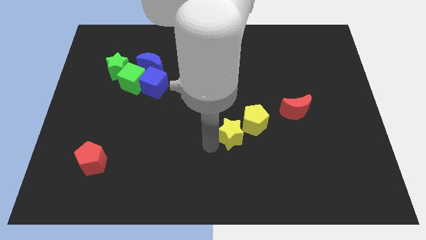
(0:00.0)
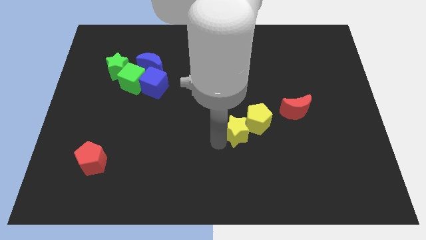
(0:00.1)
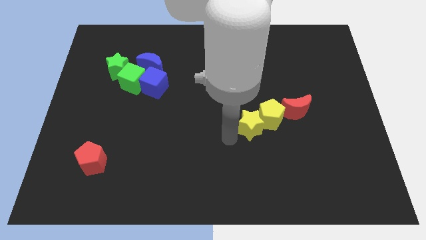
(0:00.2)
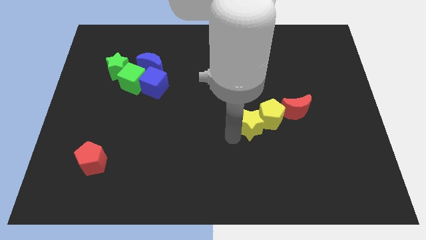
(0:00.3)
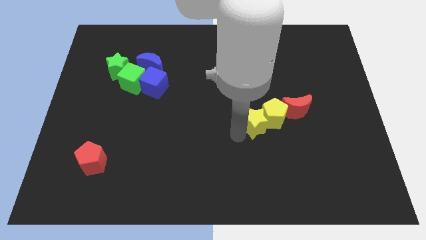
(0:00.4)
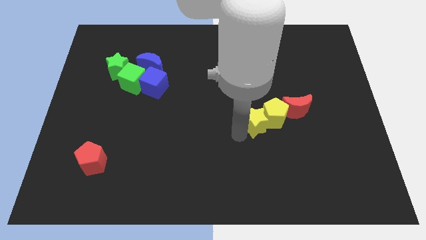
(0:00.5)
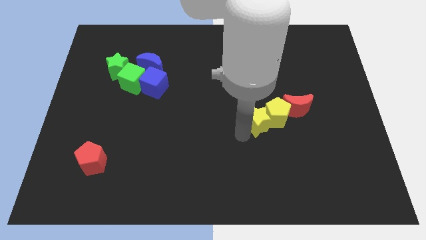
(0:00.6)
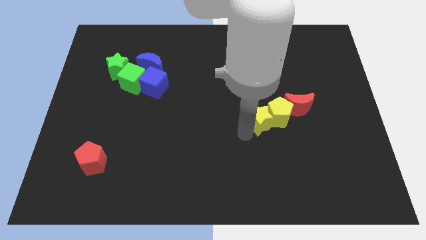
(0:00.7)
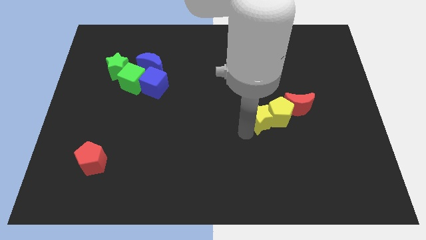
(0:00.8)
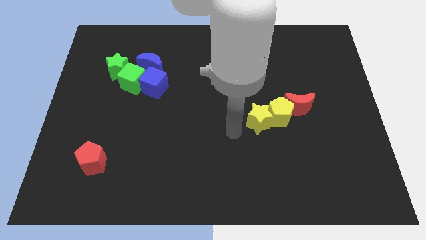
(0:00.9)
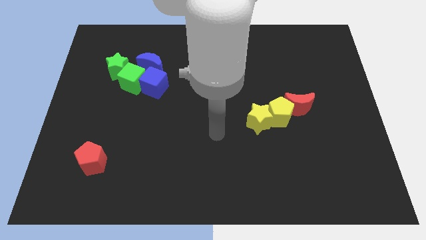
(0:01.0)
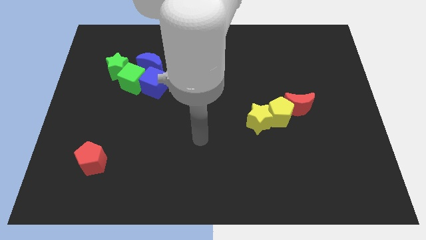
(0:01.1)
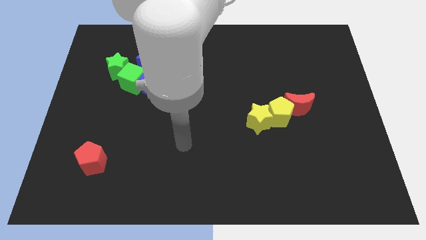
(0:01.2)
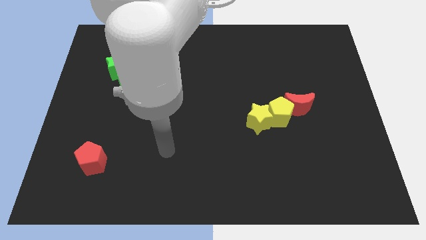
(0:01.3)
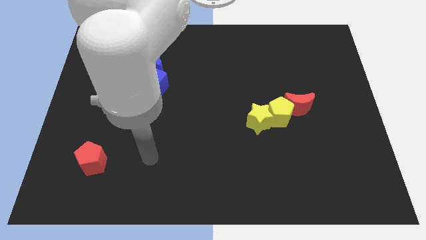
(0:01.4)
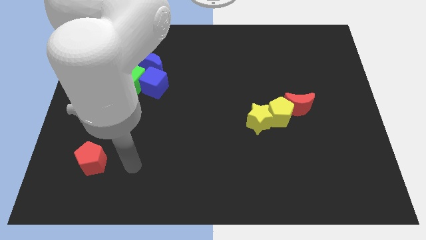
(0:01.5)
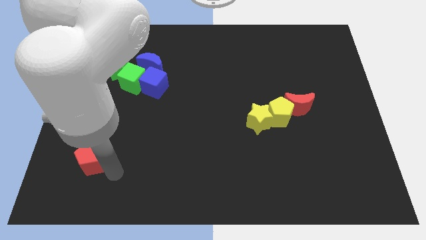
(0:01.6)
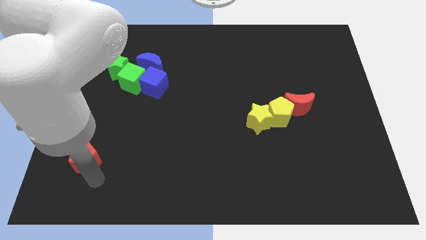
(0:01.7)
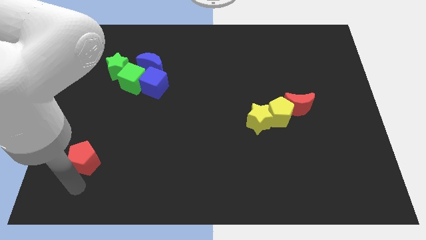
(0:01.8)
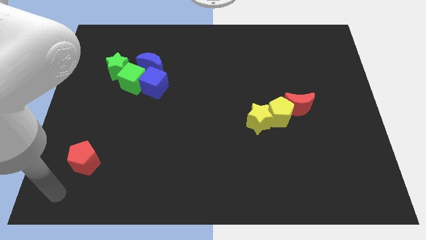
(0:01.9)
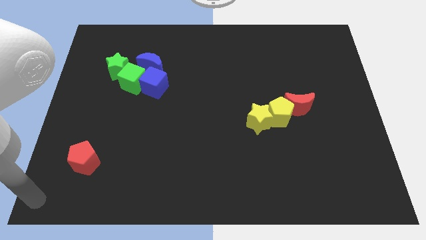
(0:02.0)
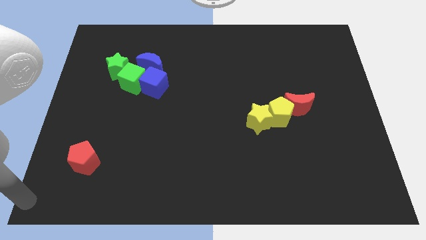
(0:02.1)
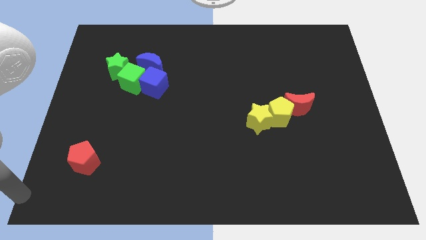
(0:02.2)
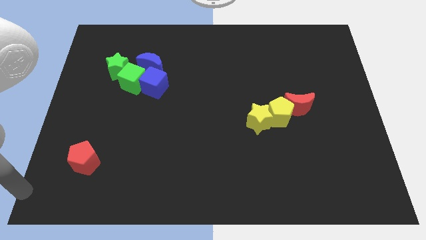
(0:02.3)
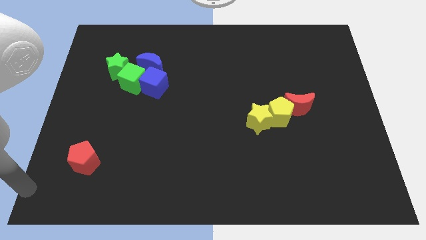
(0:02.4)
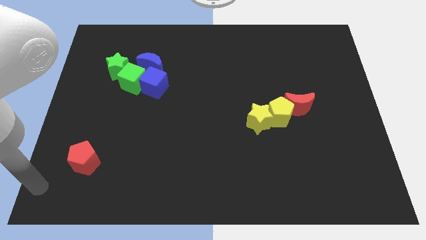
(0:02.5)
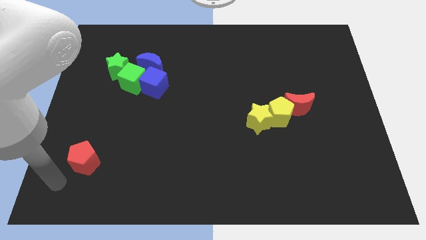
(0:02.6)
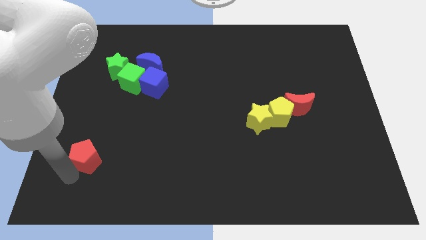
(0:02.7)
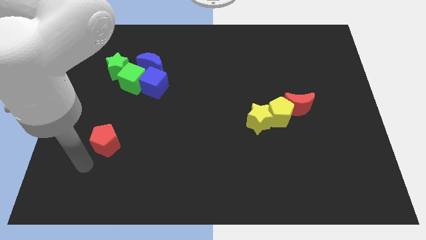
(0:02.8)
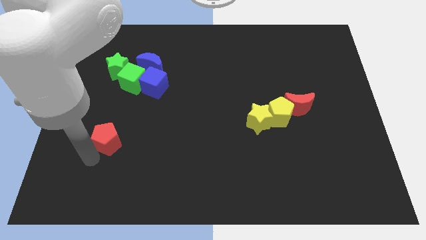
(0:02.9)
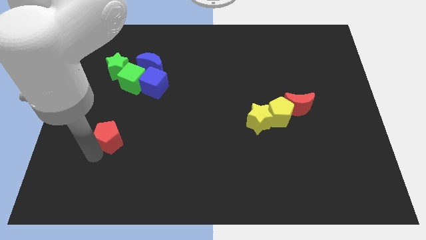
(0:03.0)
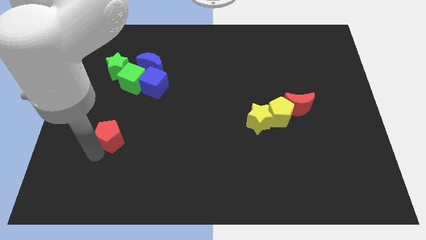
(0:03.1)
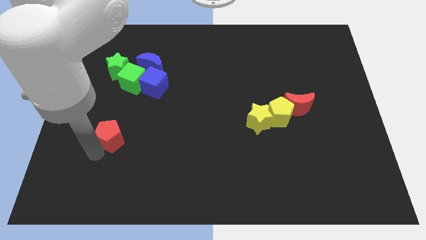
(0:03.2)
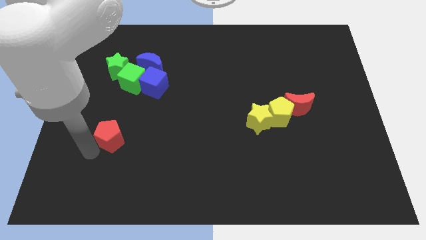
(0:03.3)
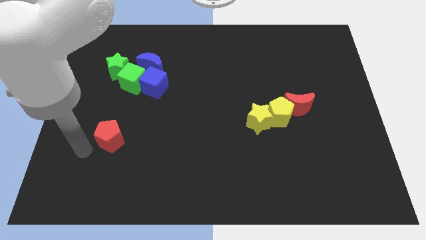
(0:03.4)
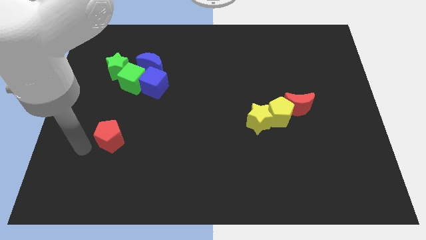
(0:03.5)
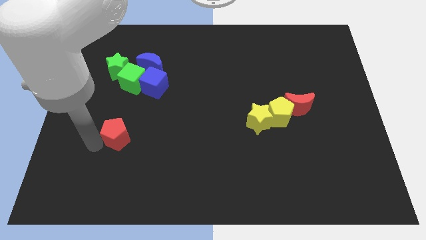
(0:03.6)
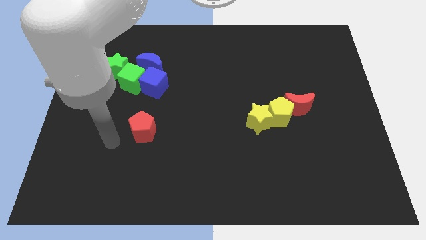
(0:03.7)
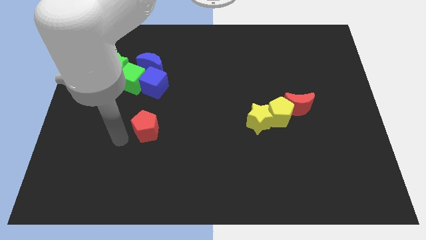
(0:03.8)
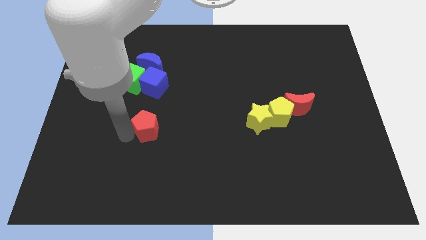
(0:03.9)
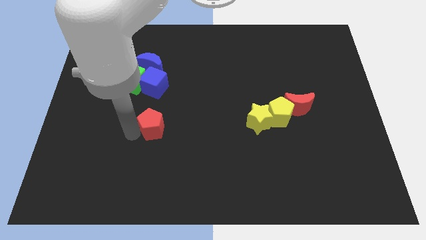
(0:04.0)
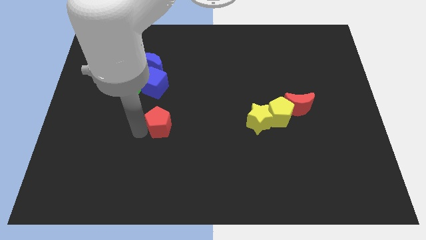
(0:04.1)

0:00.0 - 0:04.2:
move the red pentagon at the right side bottom of the blue cube

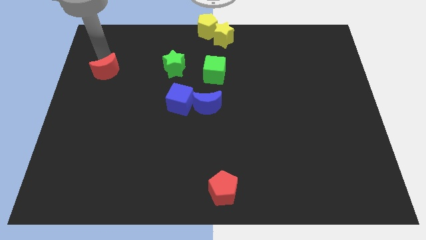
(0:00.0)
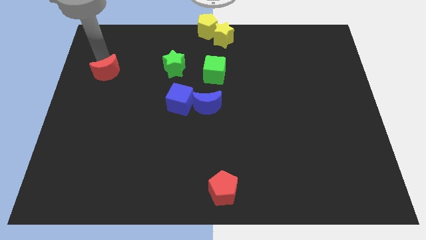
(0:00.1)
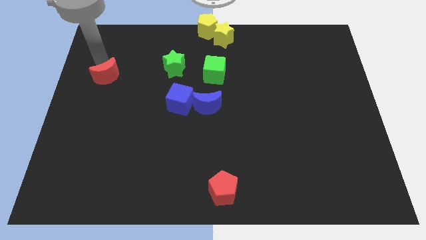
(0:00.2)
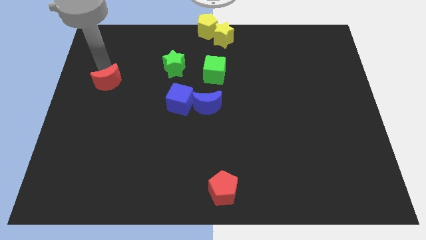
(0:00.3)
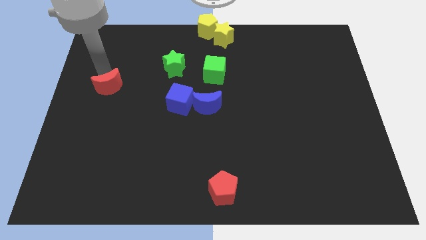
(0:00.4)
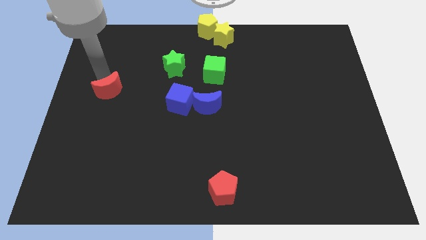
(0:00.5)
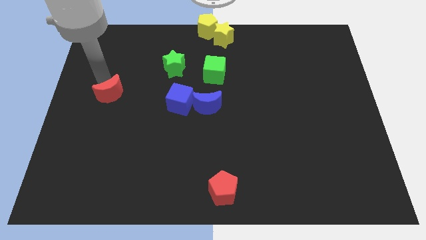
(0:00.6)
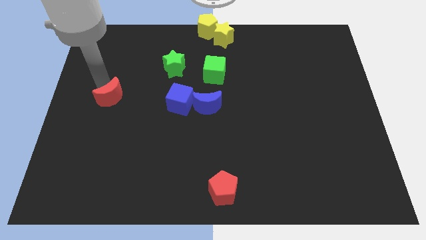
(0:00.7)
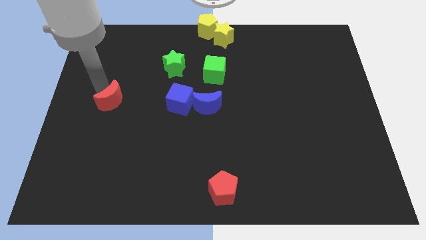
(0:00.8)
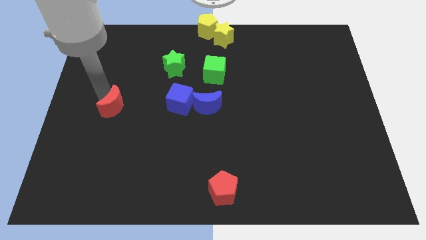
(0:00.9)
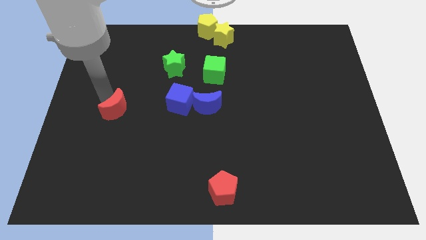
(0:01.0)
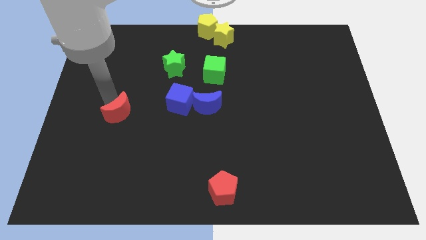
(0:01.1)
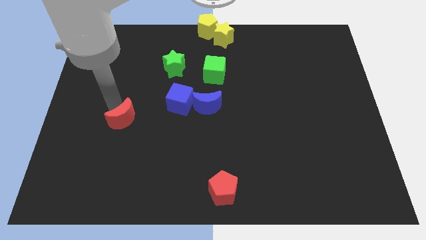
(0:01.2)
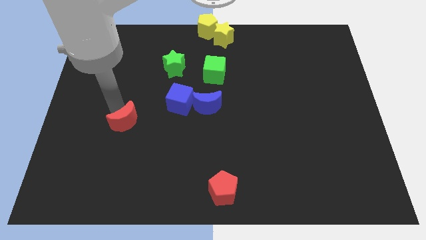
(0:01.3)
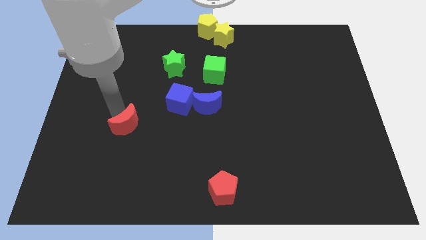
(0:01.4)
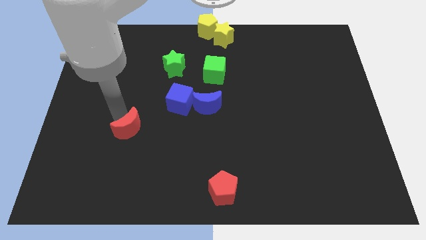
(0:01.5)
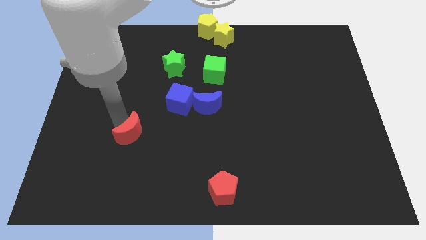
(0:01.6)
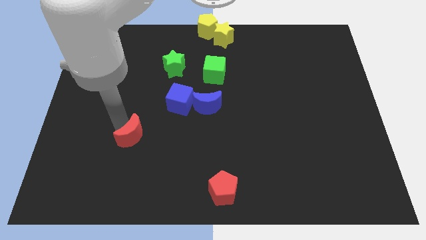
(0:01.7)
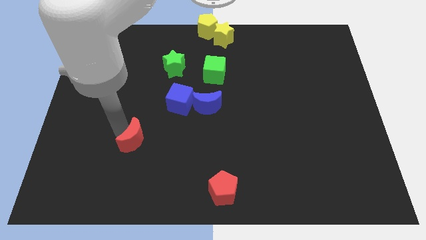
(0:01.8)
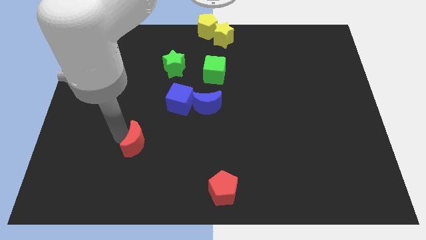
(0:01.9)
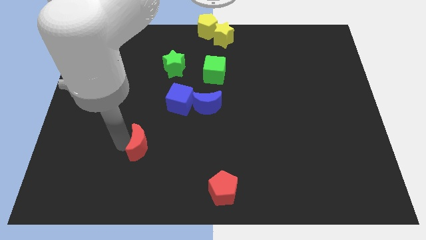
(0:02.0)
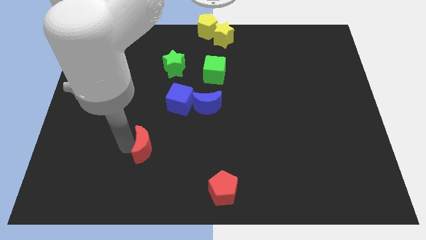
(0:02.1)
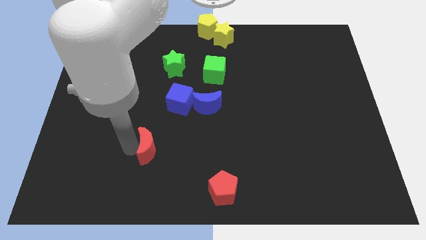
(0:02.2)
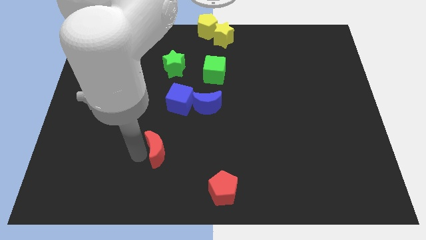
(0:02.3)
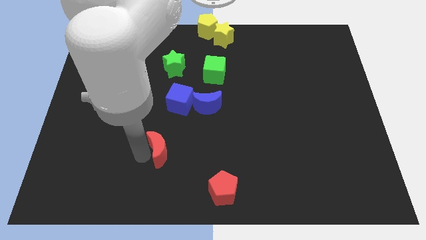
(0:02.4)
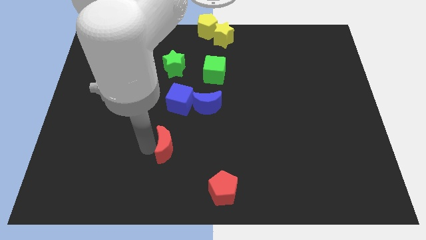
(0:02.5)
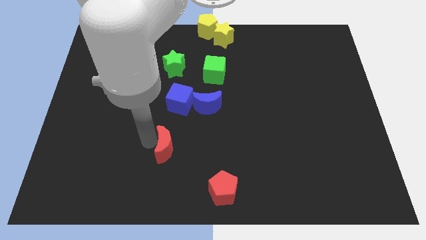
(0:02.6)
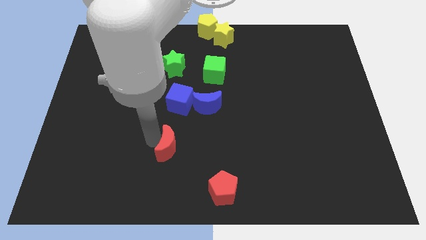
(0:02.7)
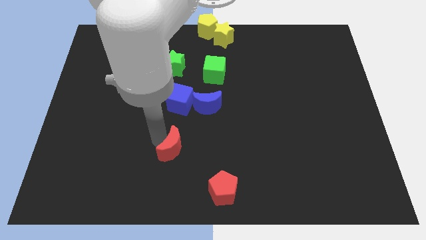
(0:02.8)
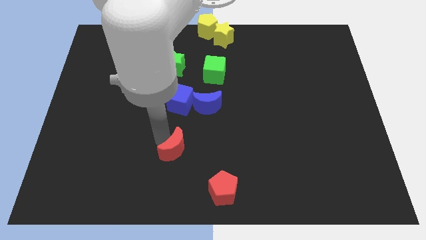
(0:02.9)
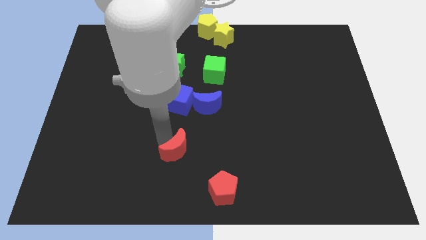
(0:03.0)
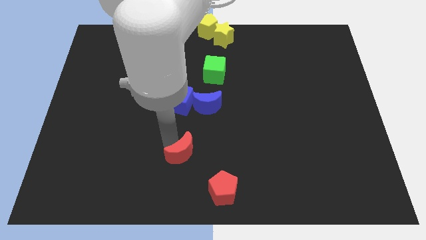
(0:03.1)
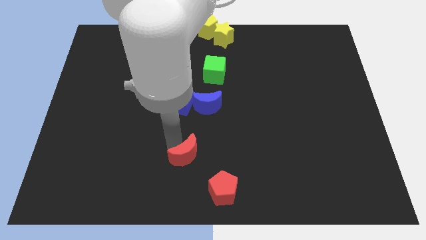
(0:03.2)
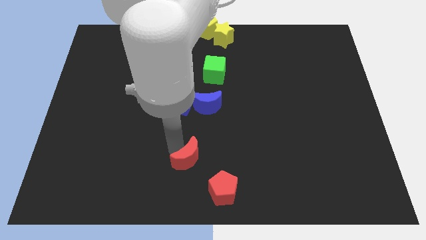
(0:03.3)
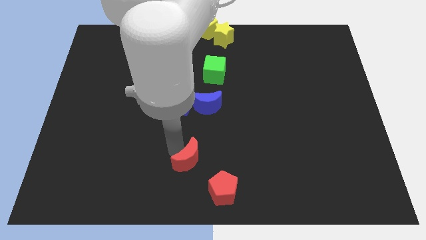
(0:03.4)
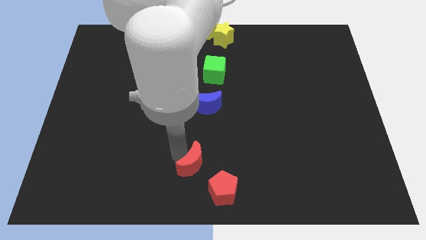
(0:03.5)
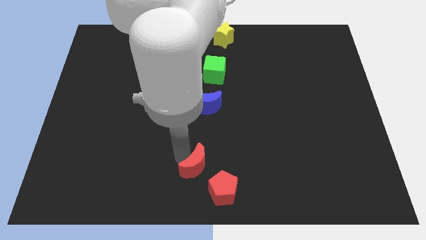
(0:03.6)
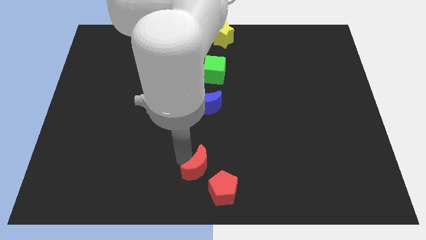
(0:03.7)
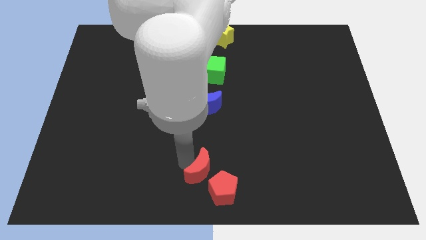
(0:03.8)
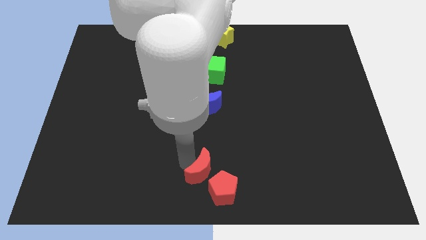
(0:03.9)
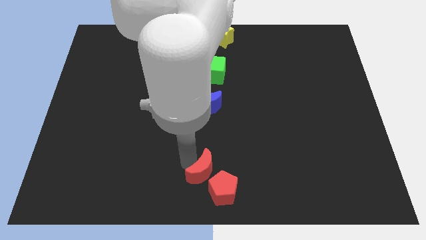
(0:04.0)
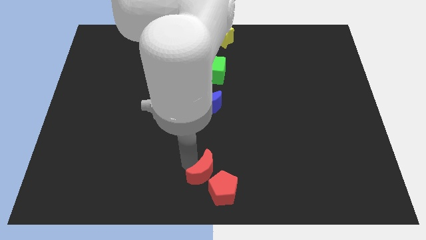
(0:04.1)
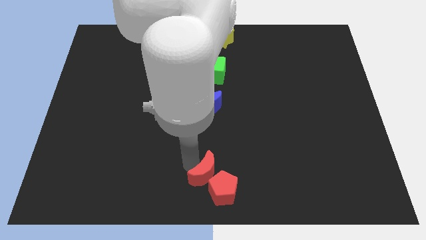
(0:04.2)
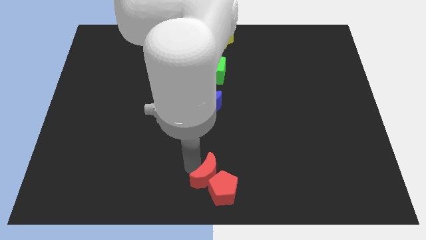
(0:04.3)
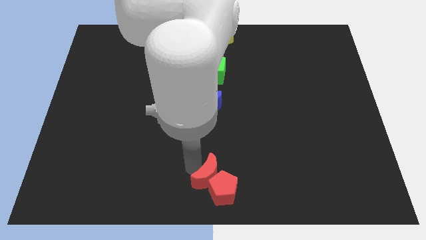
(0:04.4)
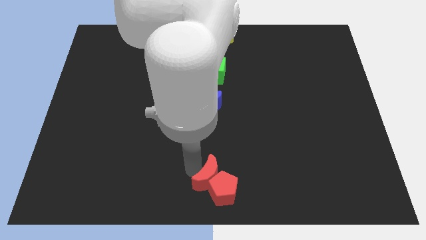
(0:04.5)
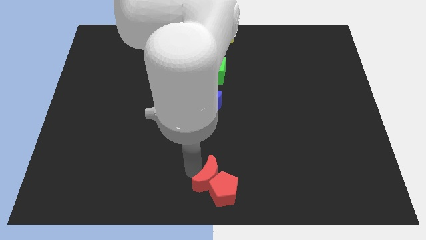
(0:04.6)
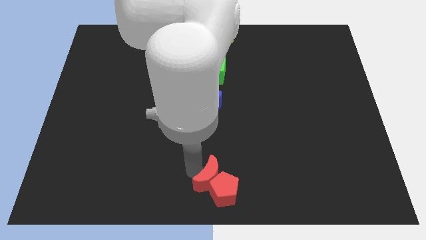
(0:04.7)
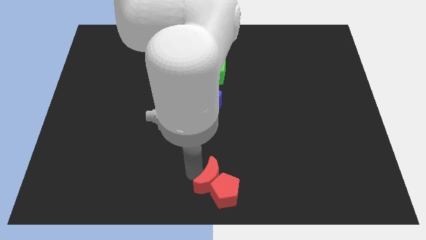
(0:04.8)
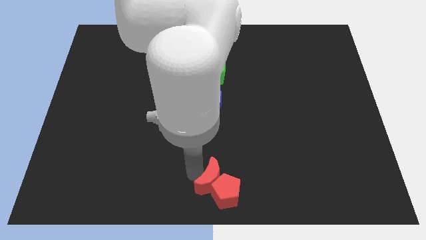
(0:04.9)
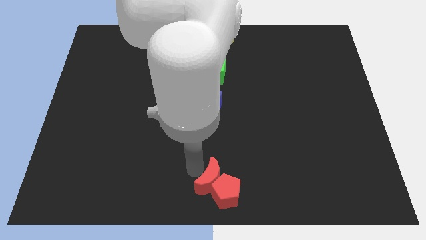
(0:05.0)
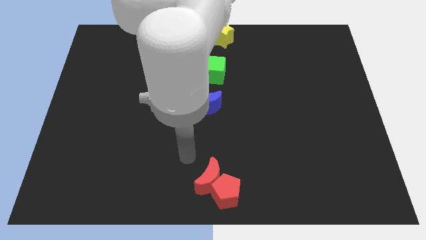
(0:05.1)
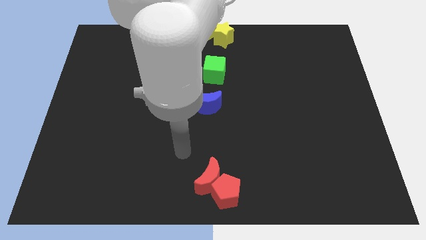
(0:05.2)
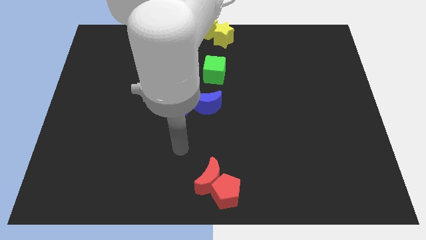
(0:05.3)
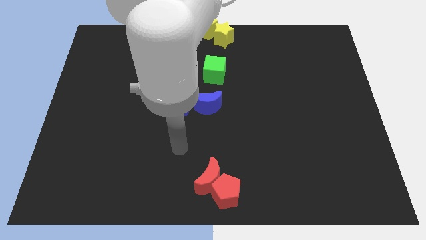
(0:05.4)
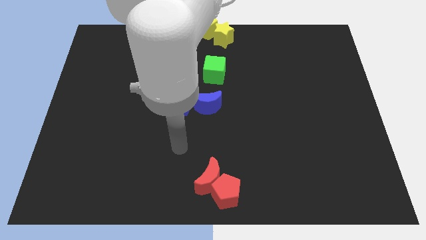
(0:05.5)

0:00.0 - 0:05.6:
push the red crescent into red pentagon
